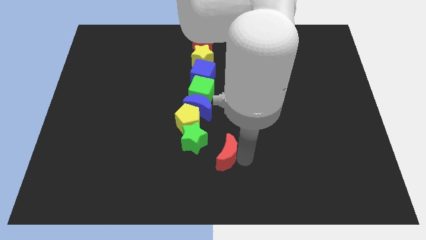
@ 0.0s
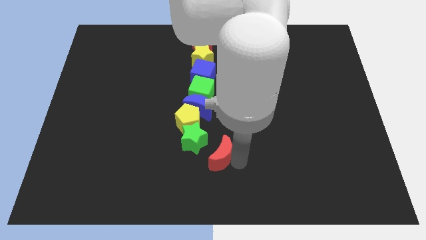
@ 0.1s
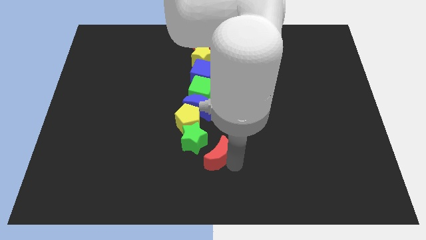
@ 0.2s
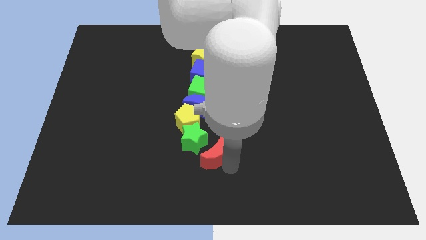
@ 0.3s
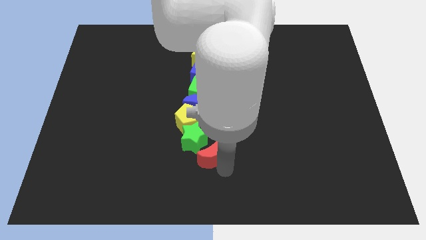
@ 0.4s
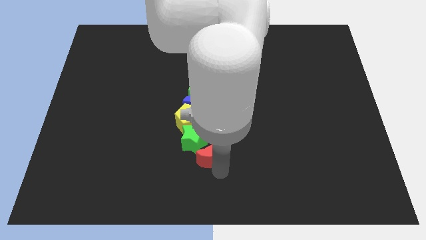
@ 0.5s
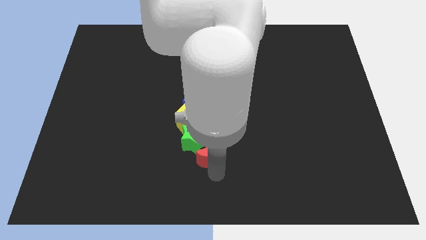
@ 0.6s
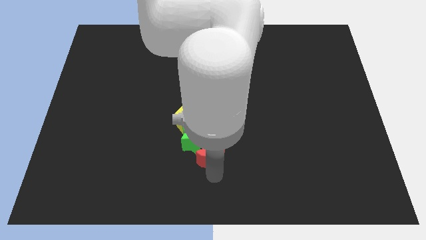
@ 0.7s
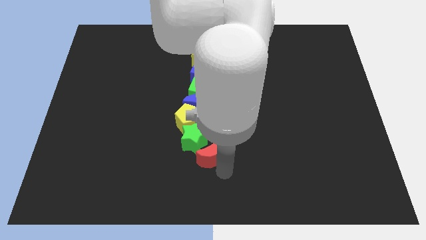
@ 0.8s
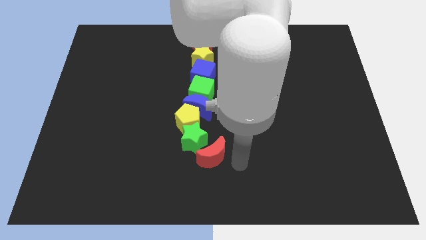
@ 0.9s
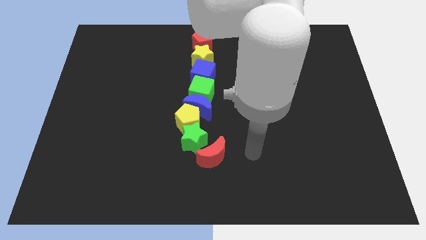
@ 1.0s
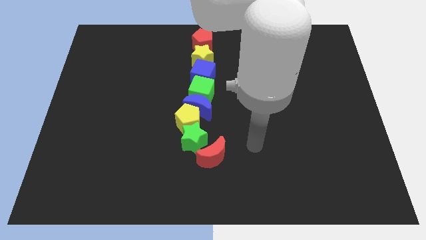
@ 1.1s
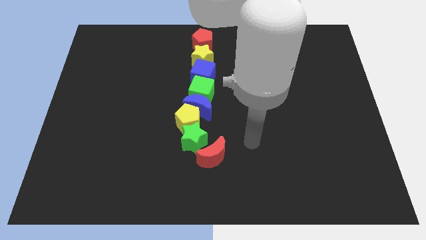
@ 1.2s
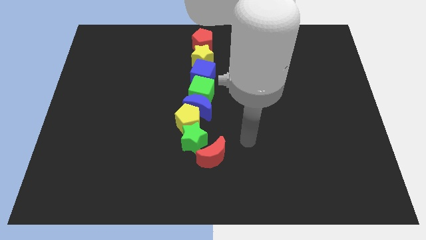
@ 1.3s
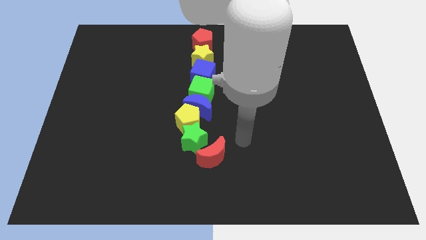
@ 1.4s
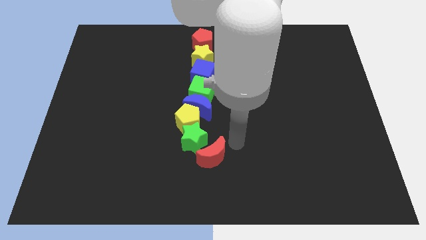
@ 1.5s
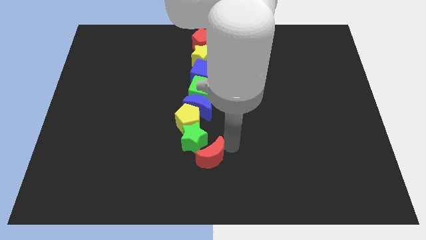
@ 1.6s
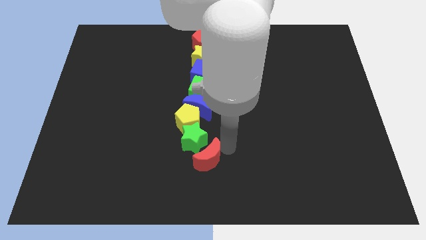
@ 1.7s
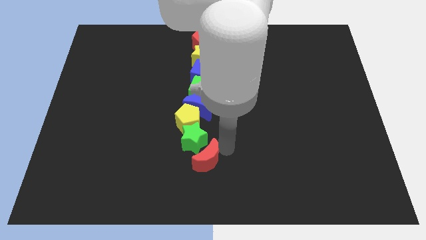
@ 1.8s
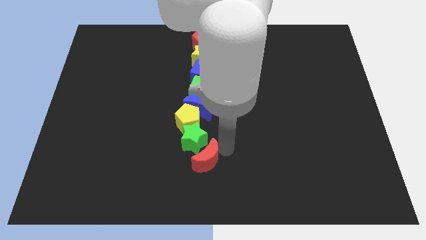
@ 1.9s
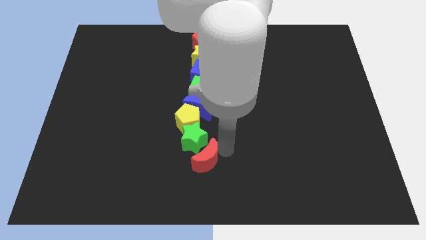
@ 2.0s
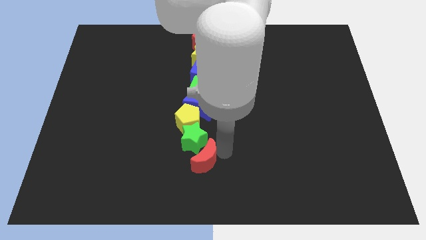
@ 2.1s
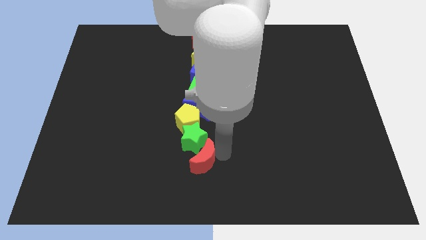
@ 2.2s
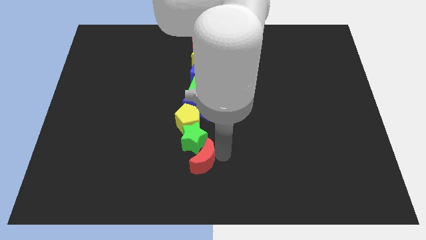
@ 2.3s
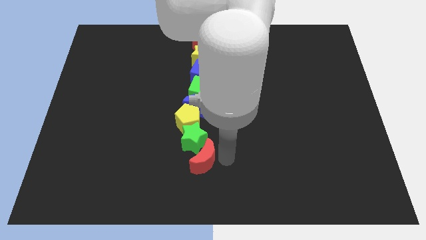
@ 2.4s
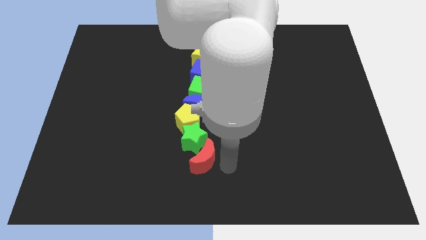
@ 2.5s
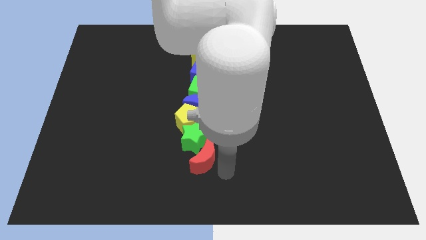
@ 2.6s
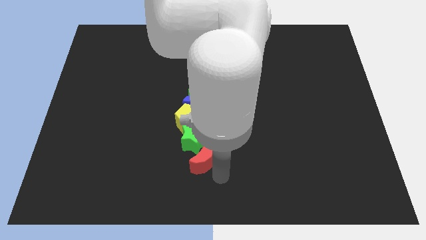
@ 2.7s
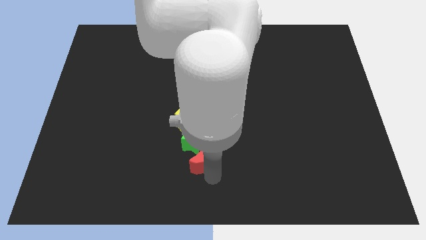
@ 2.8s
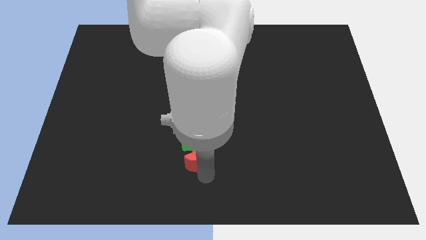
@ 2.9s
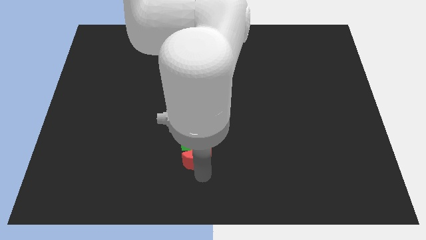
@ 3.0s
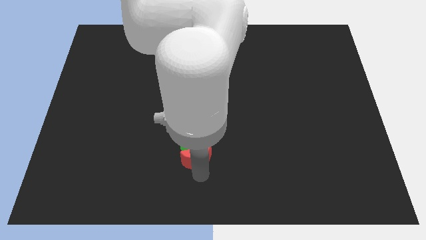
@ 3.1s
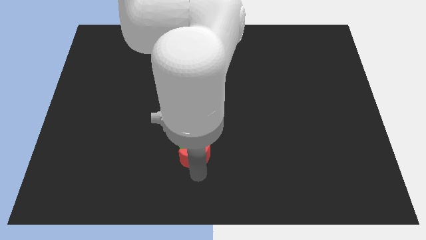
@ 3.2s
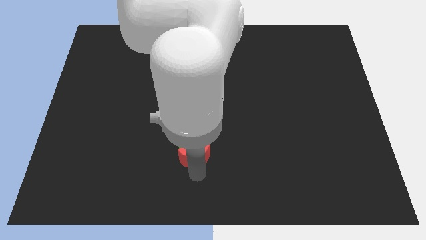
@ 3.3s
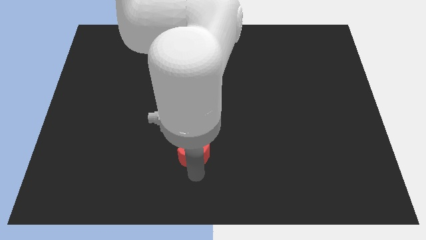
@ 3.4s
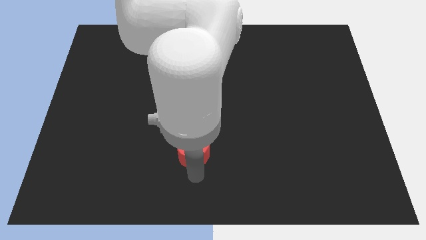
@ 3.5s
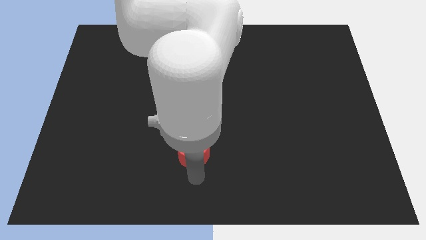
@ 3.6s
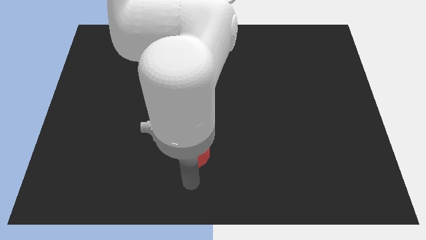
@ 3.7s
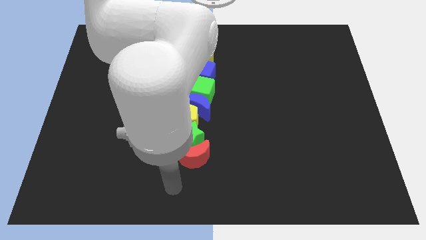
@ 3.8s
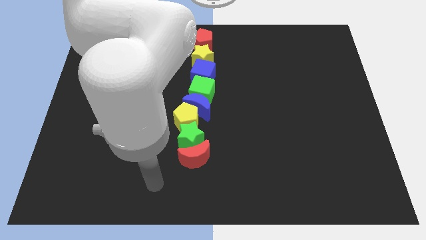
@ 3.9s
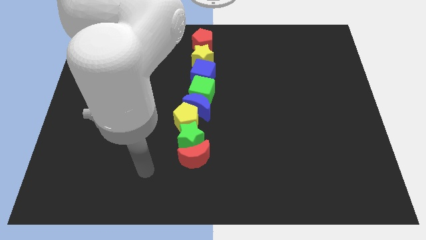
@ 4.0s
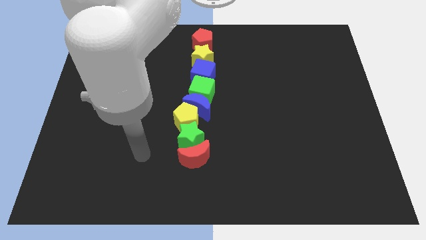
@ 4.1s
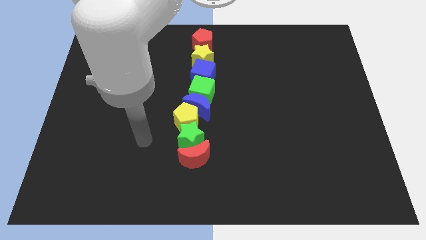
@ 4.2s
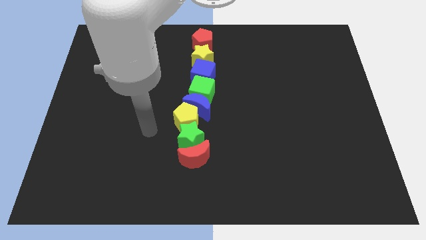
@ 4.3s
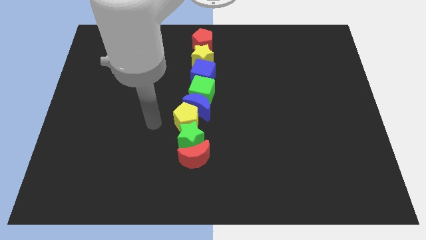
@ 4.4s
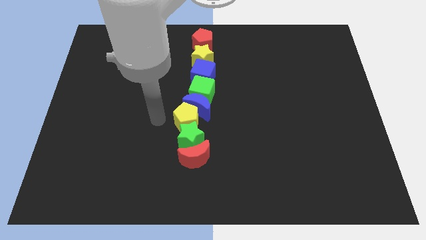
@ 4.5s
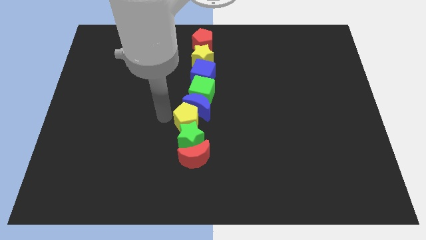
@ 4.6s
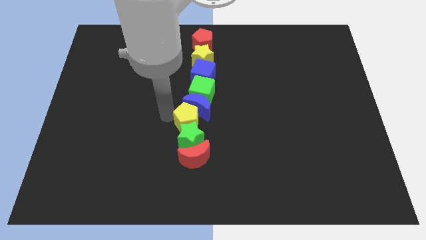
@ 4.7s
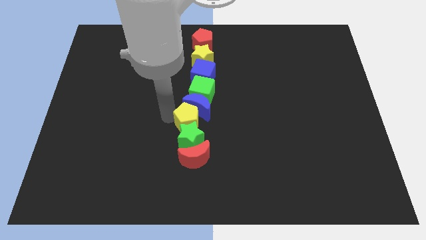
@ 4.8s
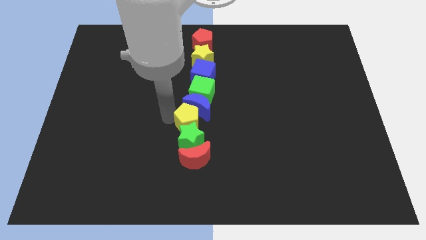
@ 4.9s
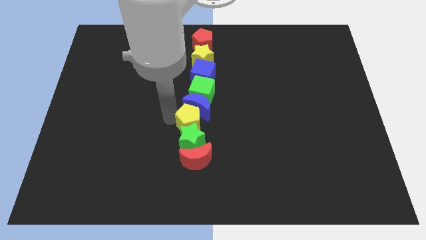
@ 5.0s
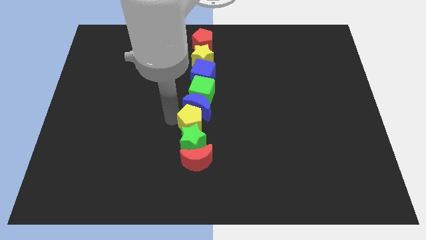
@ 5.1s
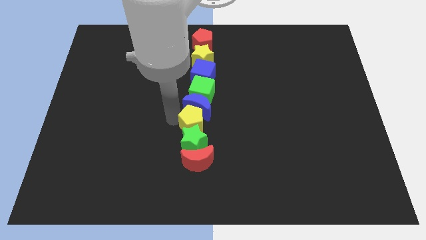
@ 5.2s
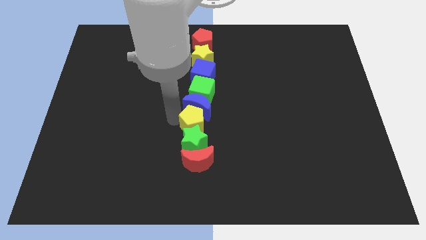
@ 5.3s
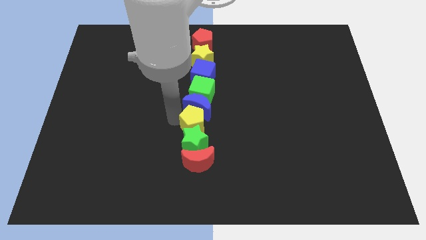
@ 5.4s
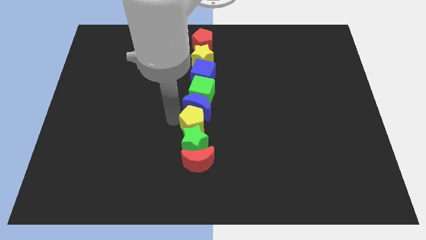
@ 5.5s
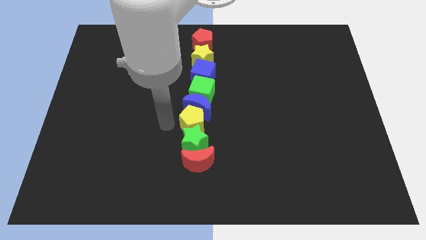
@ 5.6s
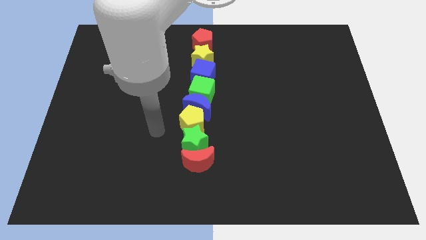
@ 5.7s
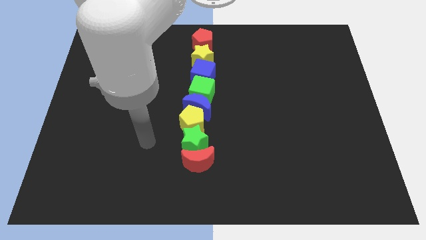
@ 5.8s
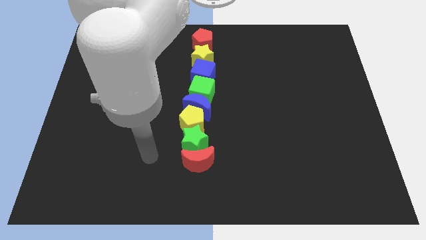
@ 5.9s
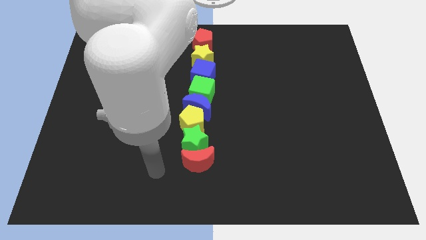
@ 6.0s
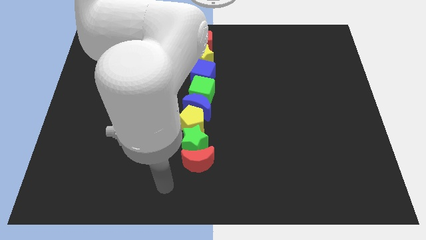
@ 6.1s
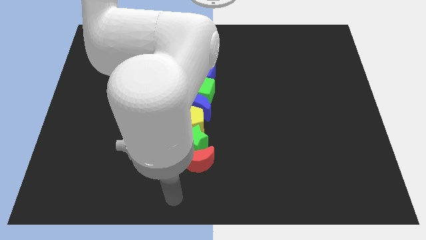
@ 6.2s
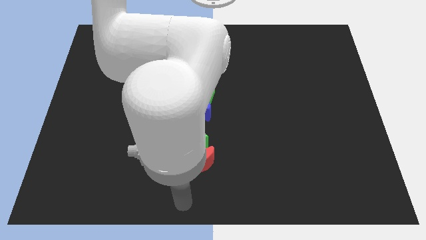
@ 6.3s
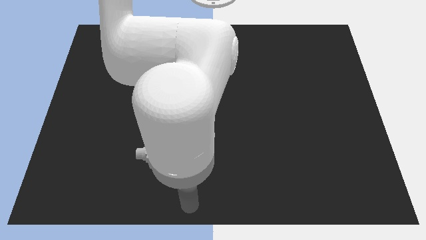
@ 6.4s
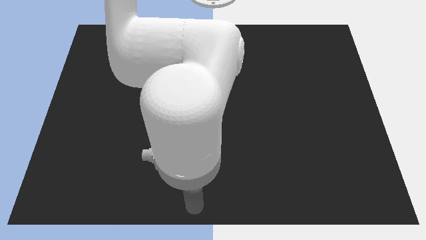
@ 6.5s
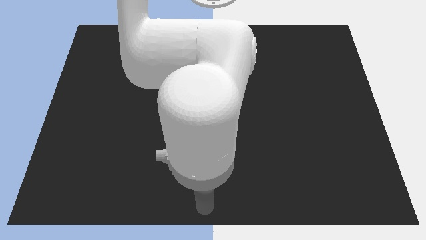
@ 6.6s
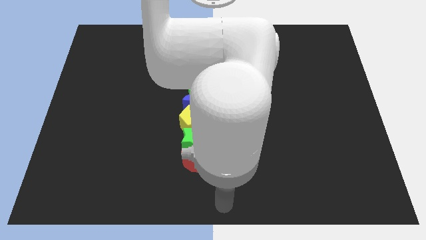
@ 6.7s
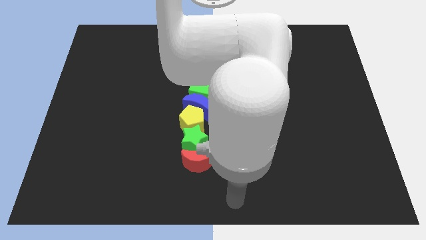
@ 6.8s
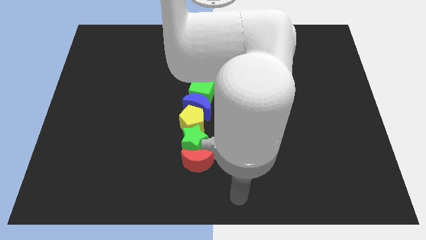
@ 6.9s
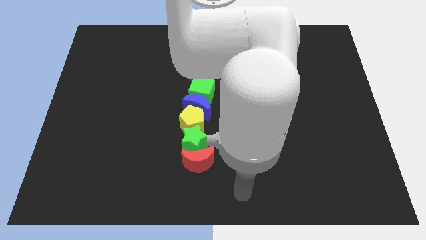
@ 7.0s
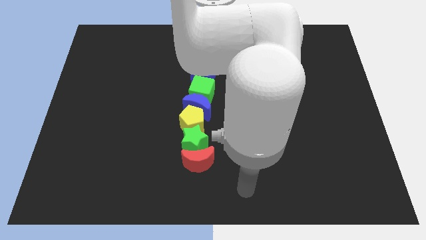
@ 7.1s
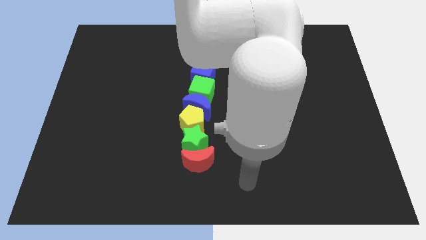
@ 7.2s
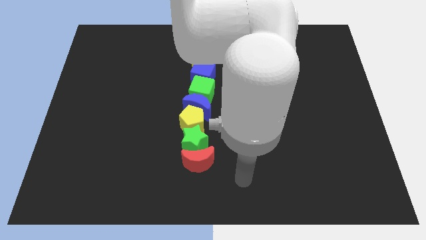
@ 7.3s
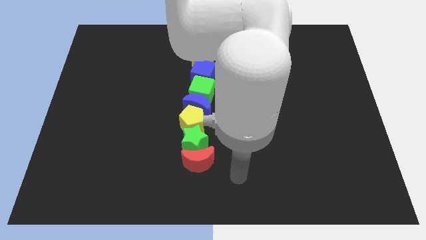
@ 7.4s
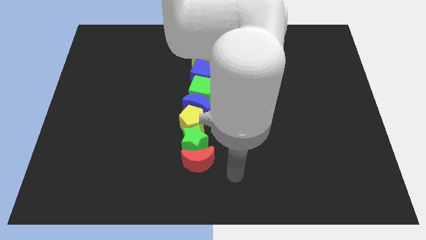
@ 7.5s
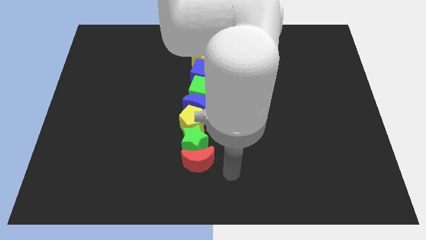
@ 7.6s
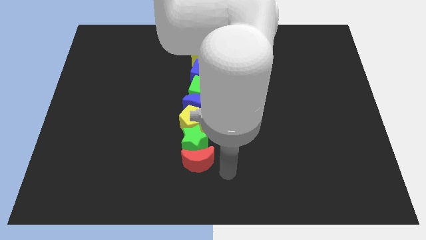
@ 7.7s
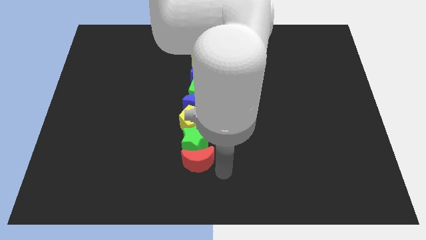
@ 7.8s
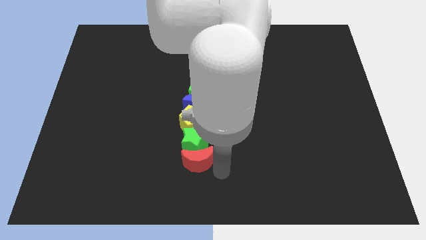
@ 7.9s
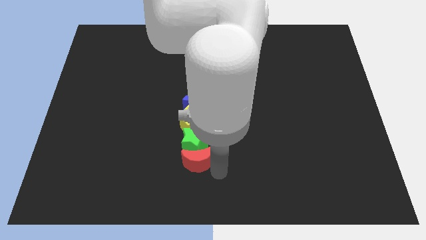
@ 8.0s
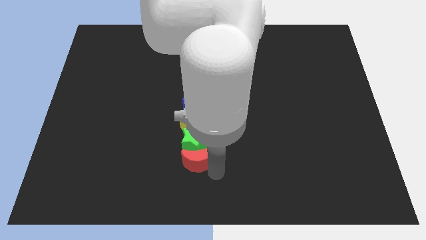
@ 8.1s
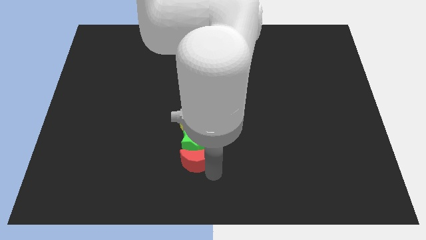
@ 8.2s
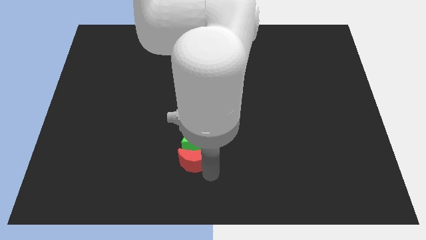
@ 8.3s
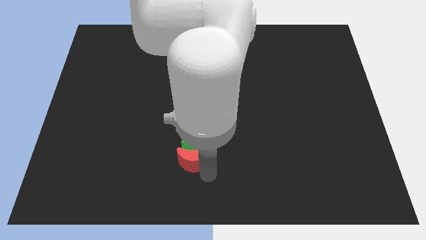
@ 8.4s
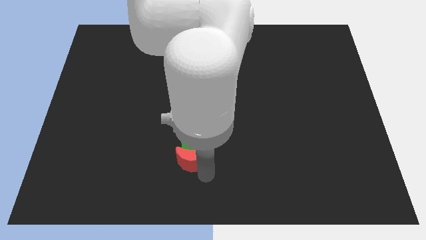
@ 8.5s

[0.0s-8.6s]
arrange a group of blocks in a line

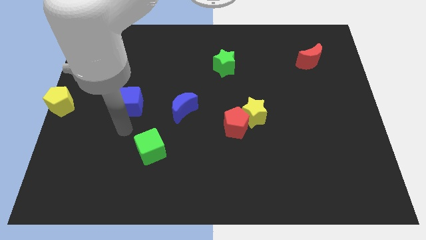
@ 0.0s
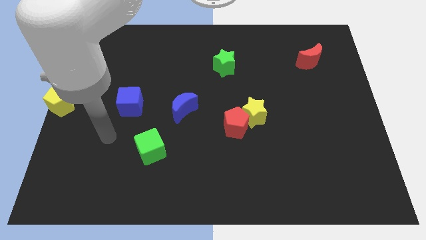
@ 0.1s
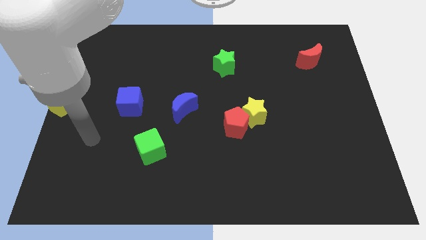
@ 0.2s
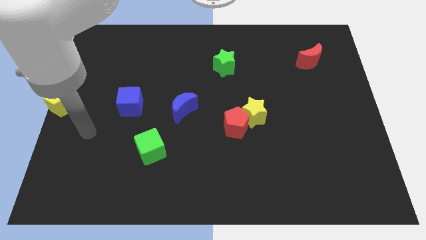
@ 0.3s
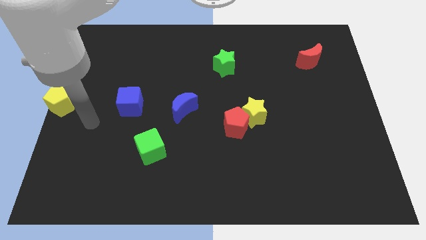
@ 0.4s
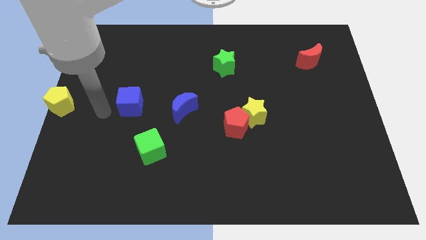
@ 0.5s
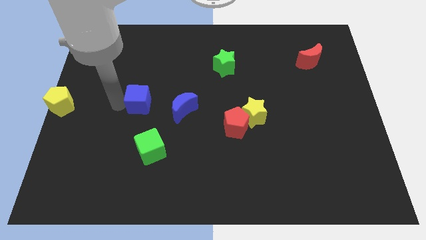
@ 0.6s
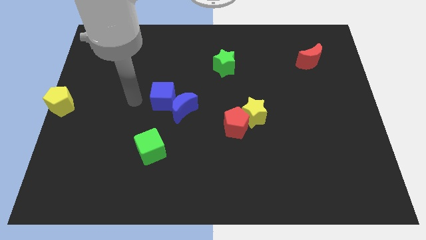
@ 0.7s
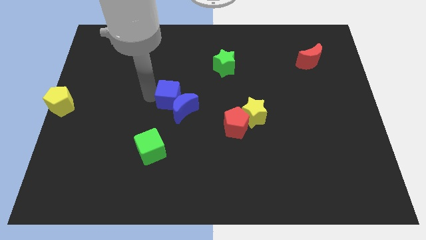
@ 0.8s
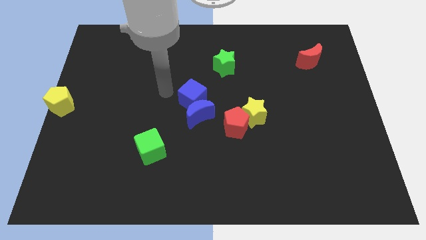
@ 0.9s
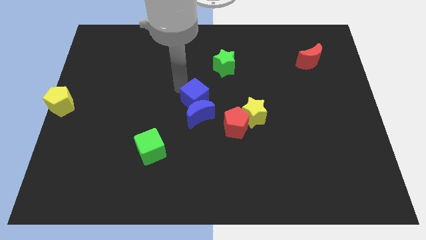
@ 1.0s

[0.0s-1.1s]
push the blue cube into the blue crescent
